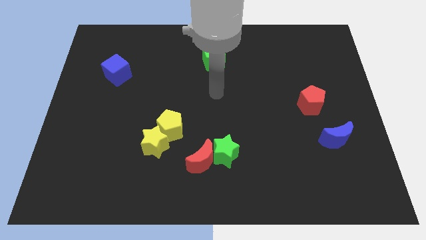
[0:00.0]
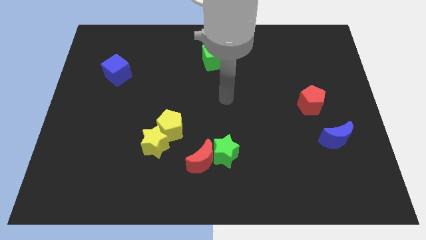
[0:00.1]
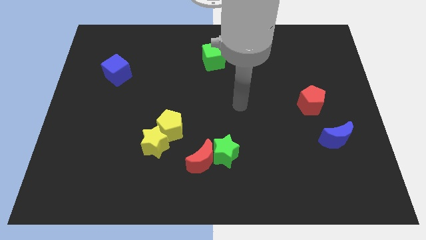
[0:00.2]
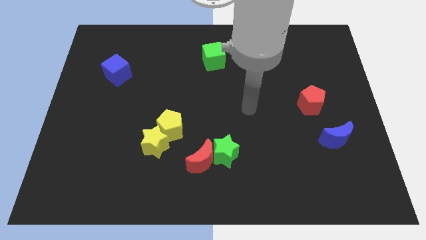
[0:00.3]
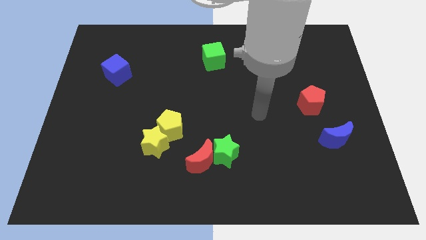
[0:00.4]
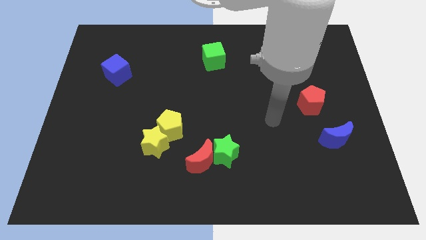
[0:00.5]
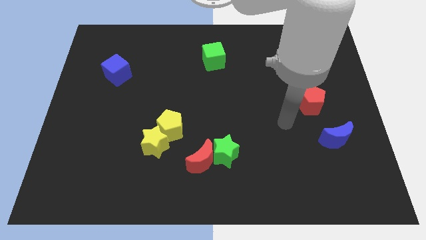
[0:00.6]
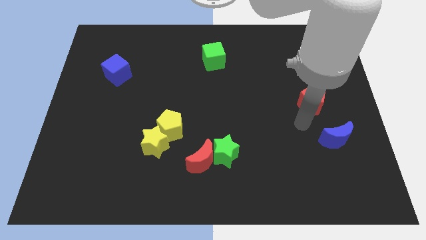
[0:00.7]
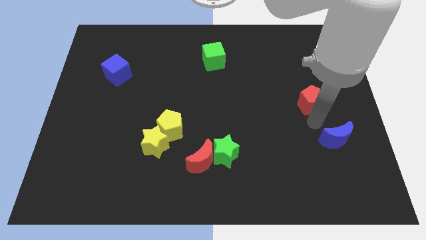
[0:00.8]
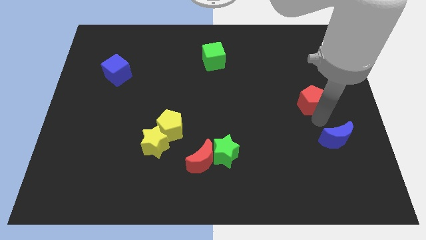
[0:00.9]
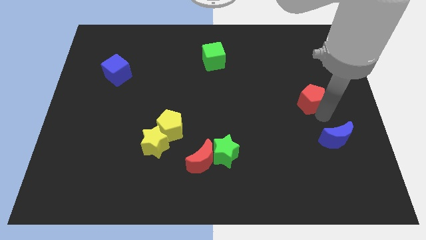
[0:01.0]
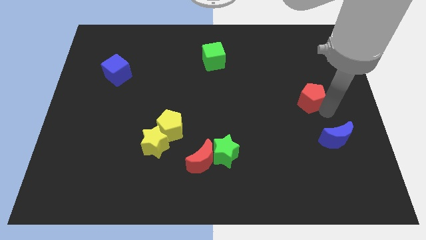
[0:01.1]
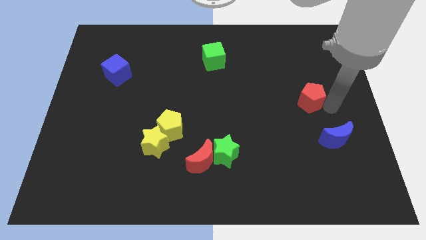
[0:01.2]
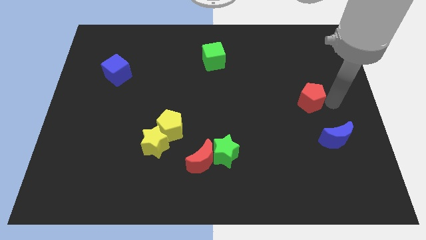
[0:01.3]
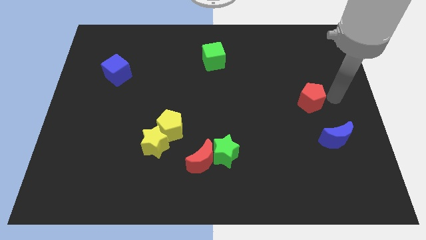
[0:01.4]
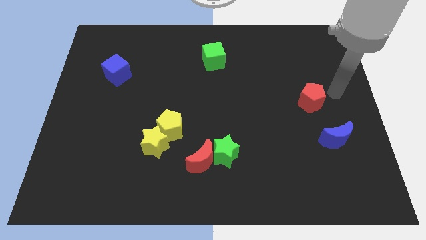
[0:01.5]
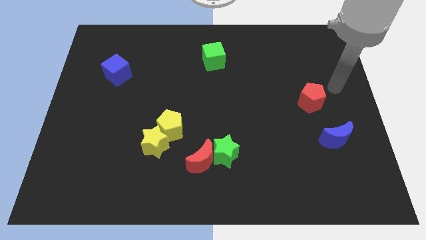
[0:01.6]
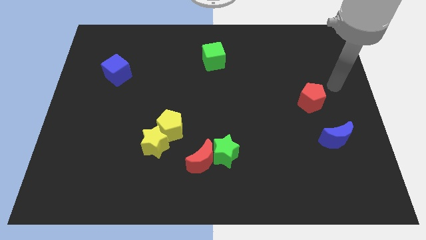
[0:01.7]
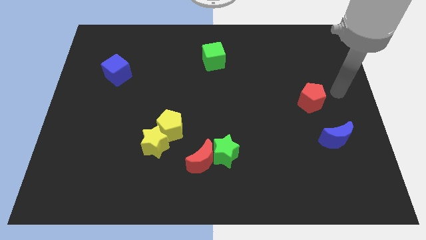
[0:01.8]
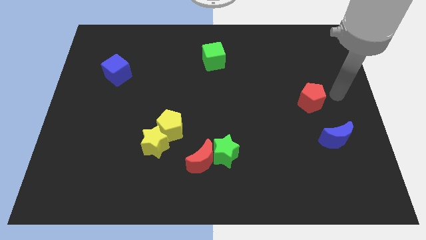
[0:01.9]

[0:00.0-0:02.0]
move the arm to the right side of the red pentagon

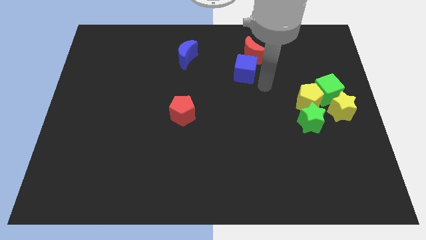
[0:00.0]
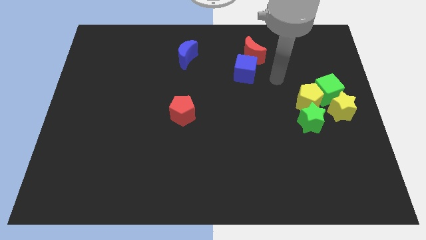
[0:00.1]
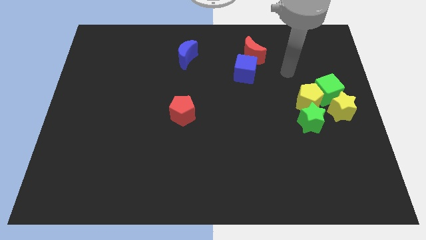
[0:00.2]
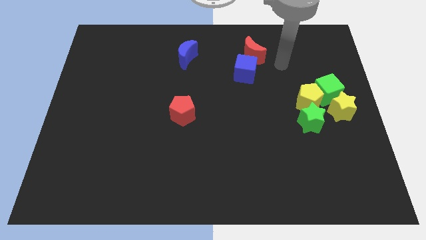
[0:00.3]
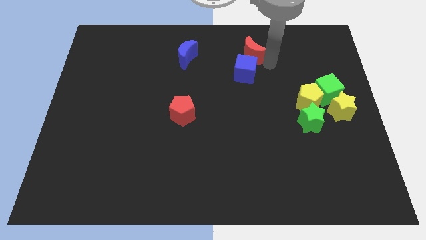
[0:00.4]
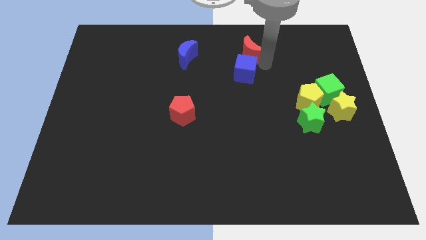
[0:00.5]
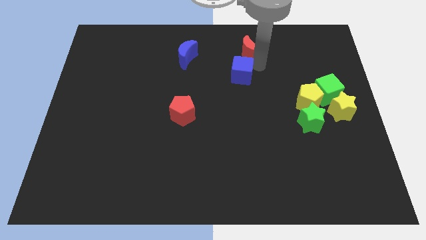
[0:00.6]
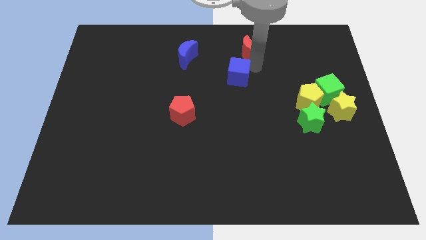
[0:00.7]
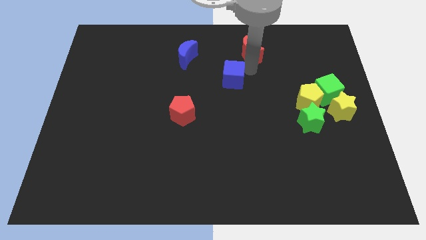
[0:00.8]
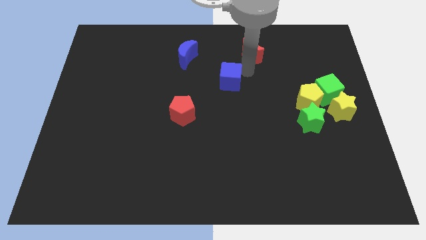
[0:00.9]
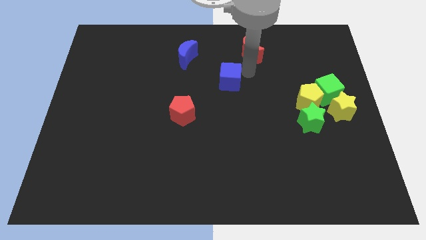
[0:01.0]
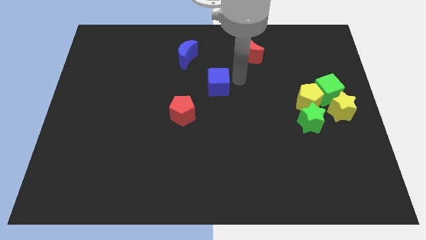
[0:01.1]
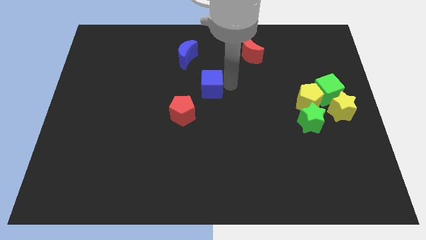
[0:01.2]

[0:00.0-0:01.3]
separate the blue cube from the red crescent

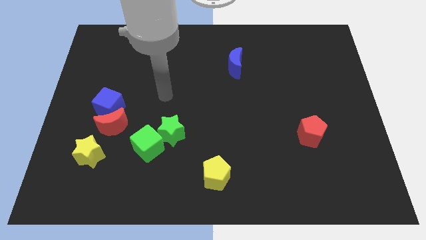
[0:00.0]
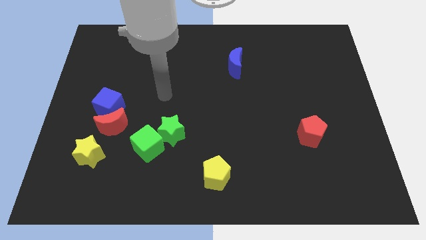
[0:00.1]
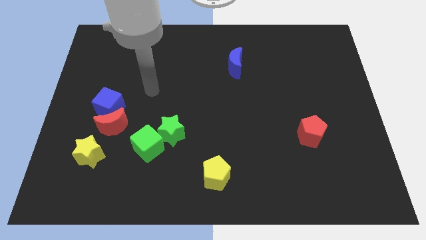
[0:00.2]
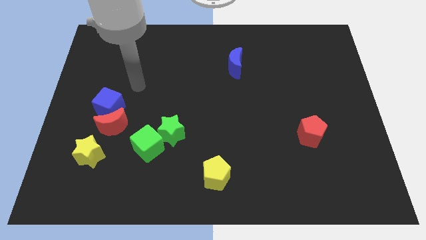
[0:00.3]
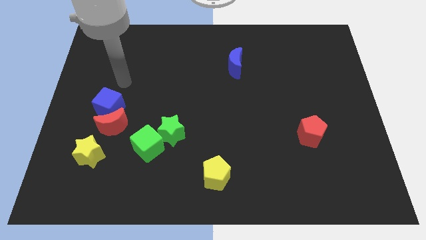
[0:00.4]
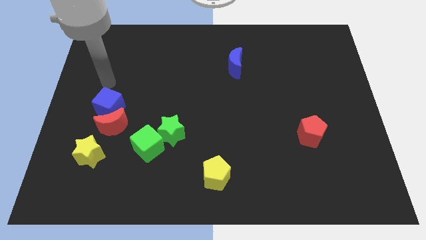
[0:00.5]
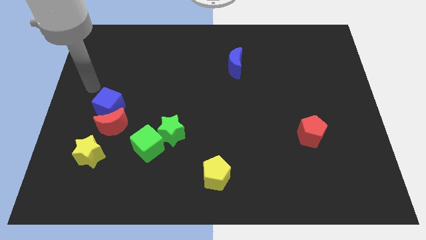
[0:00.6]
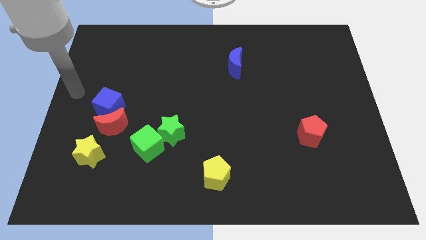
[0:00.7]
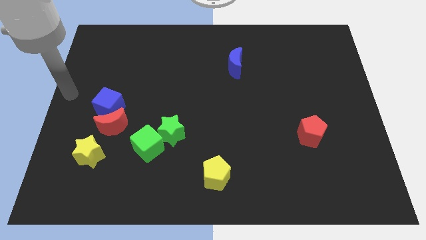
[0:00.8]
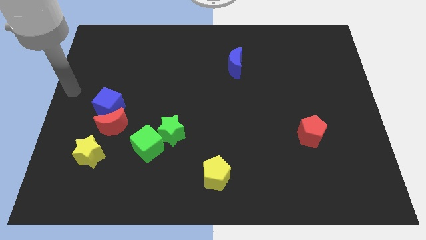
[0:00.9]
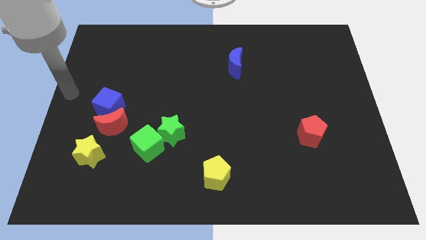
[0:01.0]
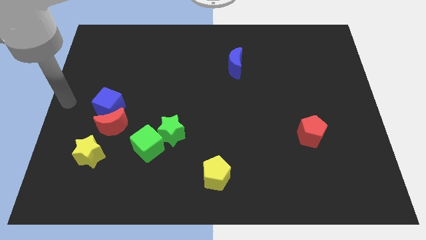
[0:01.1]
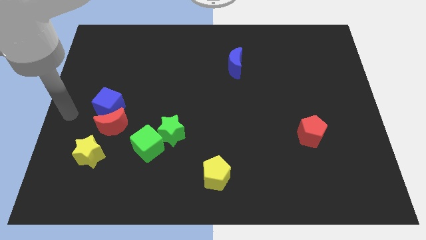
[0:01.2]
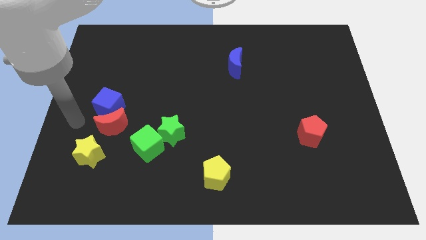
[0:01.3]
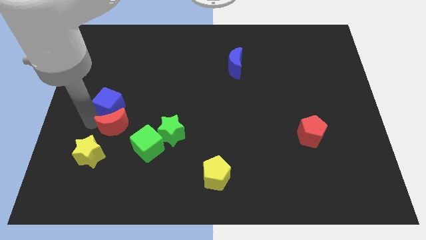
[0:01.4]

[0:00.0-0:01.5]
tap the red crescent

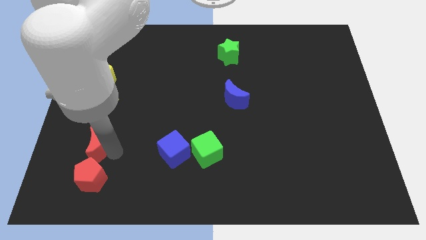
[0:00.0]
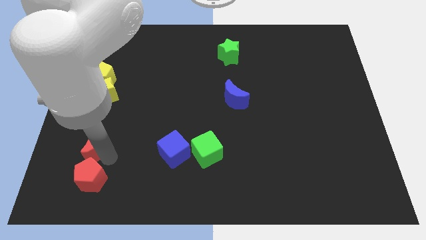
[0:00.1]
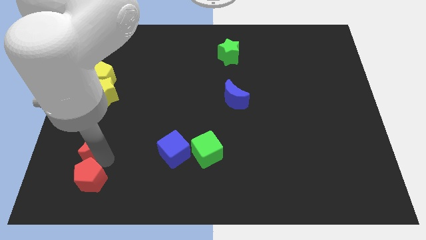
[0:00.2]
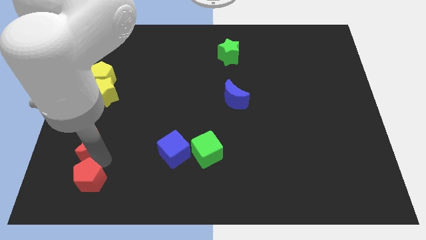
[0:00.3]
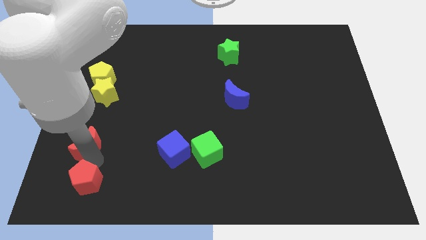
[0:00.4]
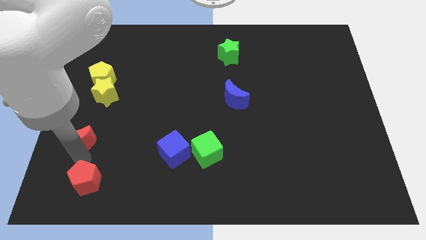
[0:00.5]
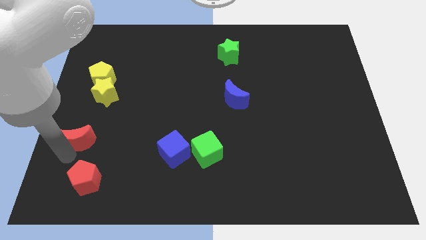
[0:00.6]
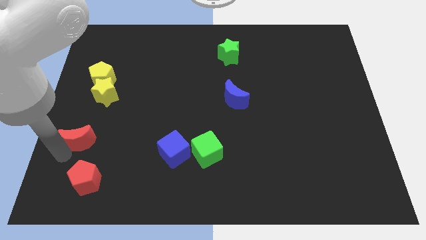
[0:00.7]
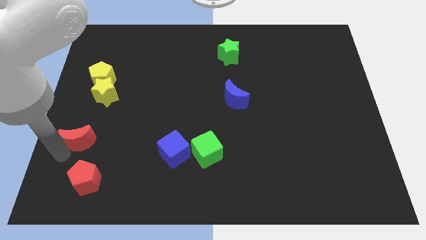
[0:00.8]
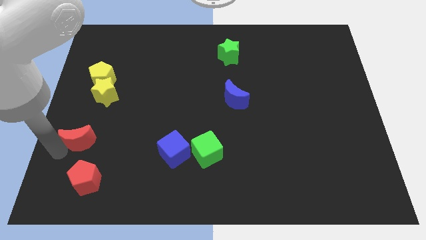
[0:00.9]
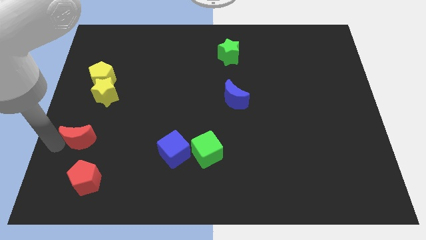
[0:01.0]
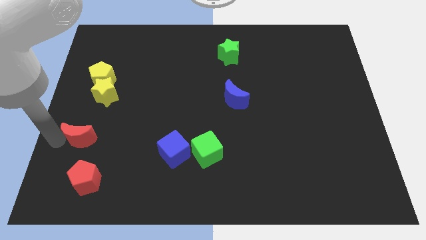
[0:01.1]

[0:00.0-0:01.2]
separate red moon from red pentagon

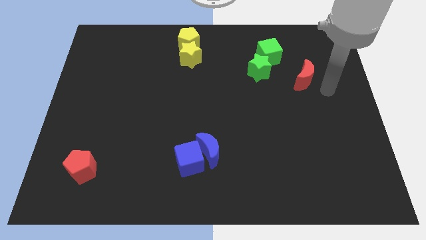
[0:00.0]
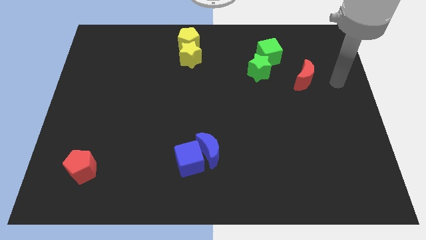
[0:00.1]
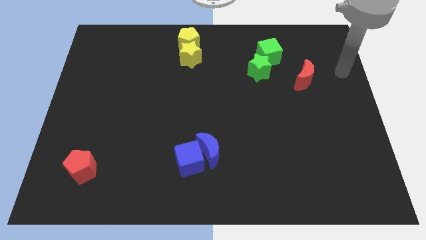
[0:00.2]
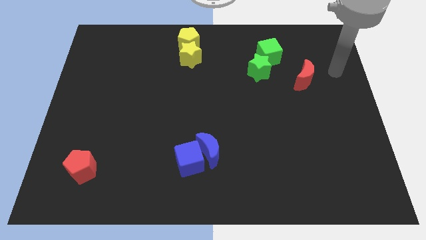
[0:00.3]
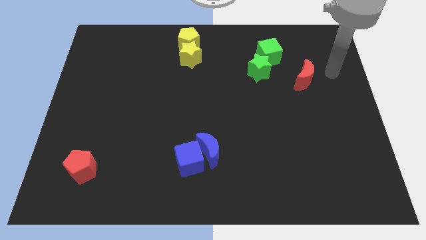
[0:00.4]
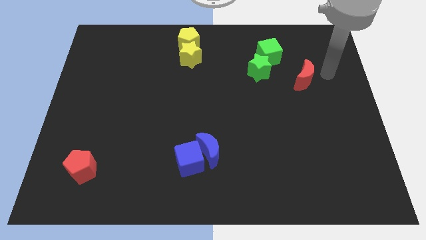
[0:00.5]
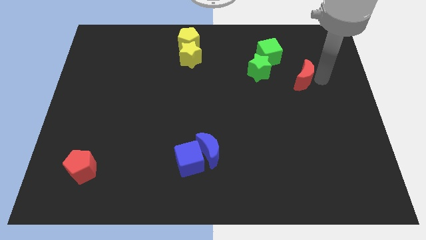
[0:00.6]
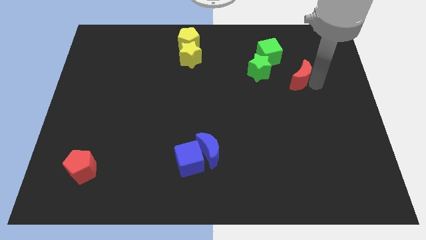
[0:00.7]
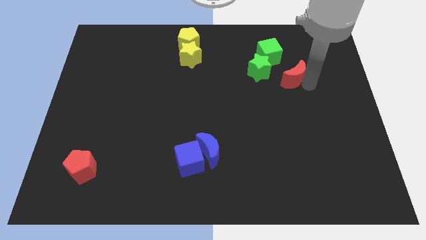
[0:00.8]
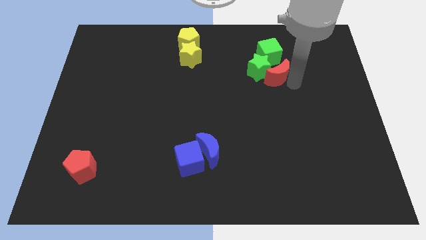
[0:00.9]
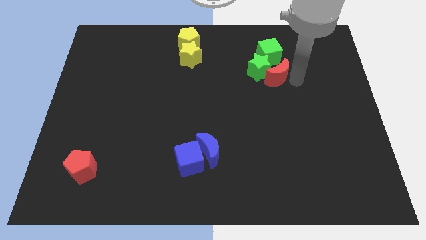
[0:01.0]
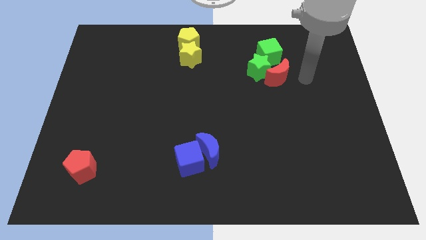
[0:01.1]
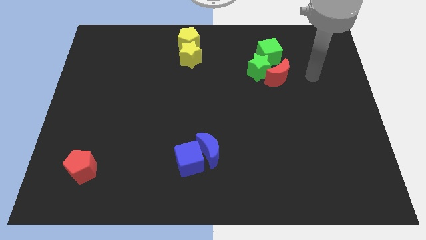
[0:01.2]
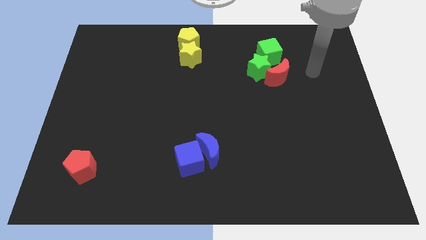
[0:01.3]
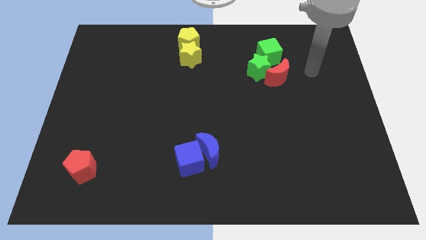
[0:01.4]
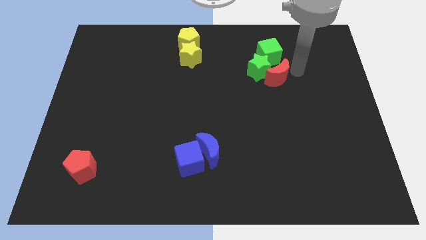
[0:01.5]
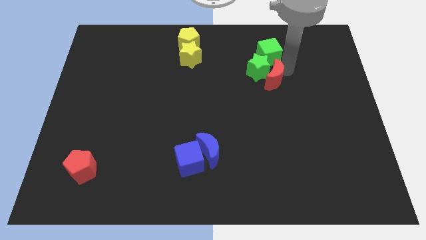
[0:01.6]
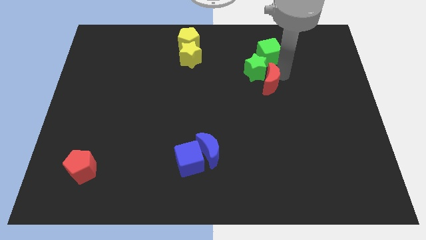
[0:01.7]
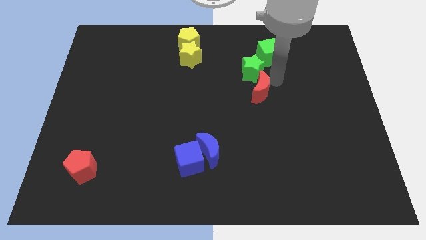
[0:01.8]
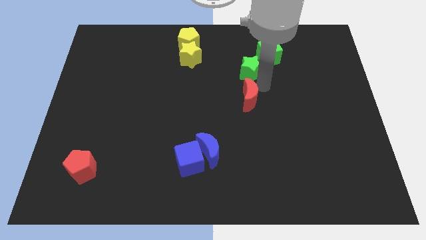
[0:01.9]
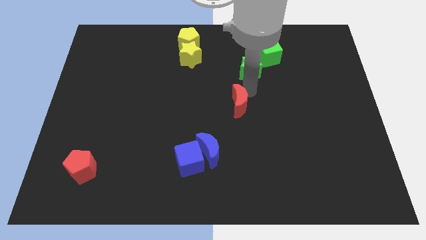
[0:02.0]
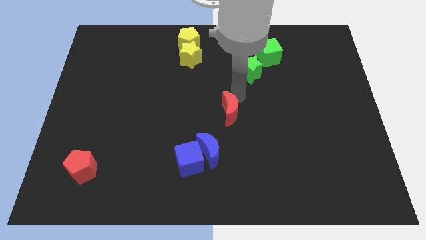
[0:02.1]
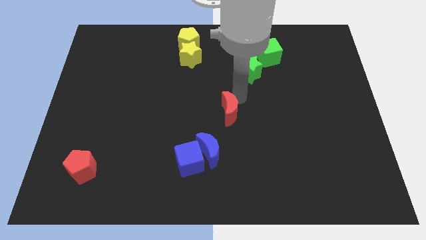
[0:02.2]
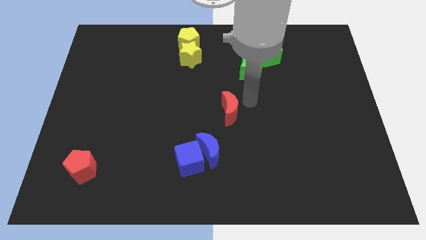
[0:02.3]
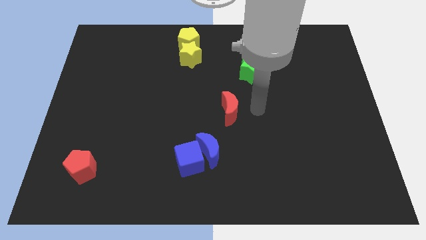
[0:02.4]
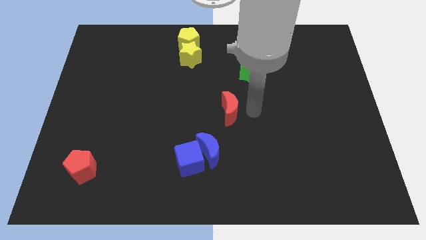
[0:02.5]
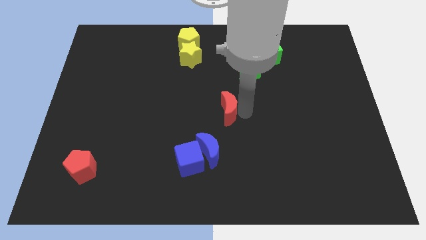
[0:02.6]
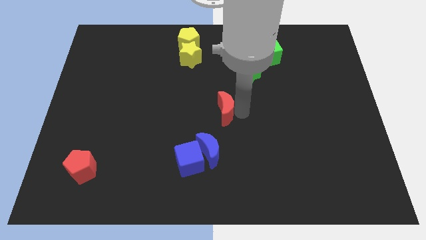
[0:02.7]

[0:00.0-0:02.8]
slide the red moon in between green star and blue crescent
